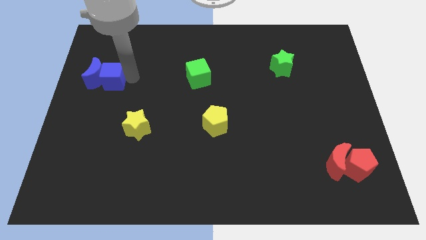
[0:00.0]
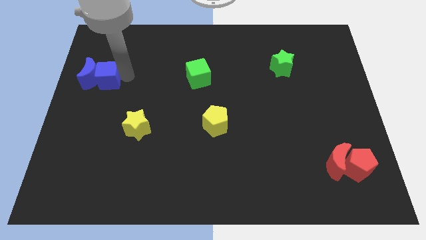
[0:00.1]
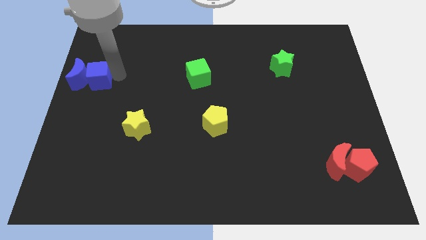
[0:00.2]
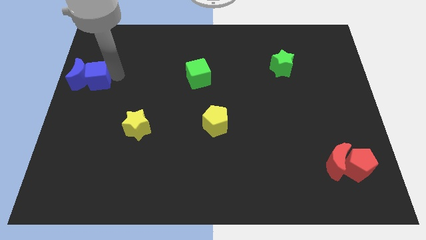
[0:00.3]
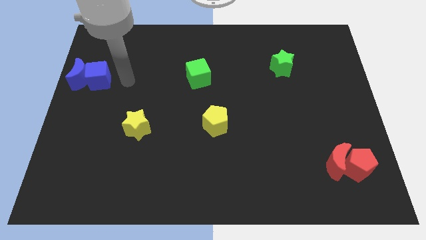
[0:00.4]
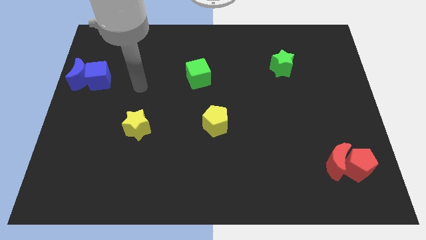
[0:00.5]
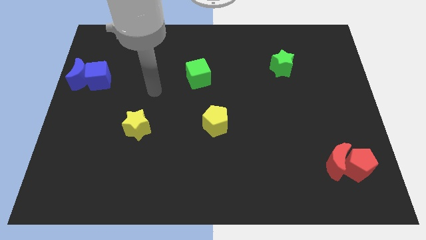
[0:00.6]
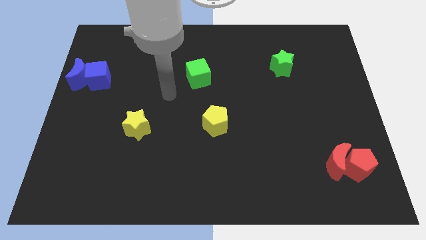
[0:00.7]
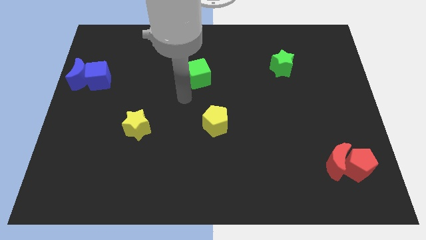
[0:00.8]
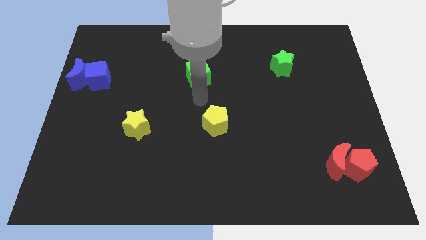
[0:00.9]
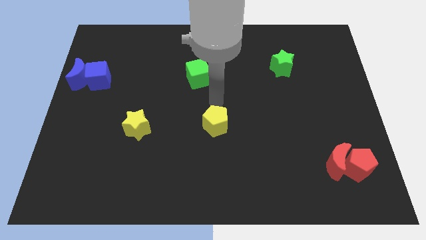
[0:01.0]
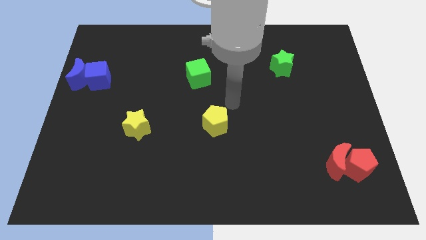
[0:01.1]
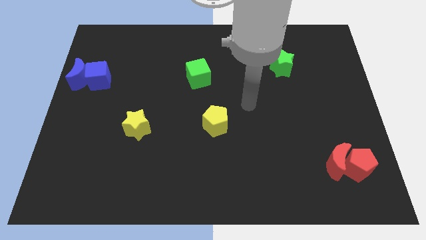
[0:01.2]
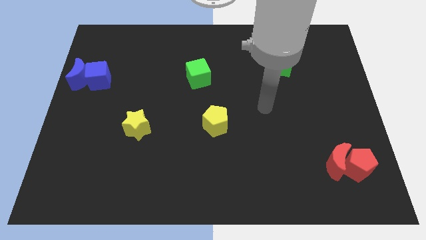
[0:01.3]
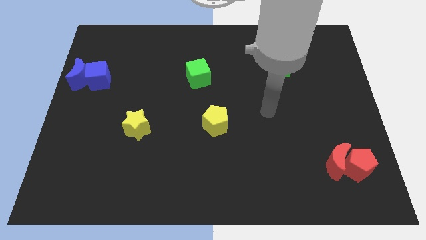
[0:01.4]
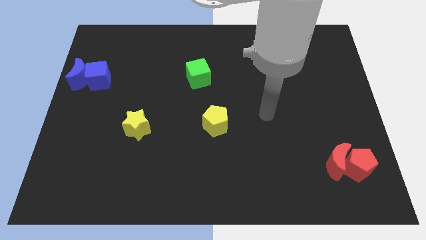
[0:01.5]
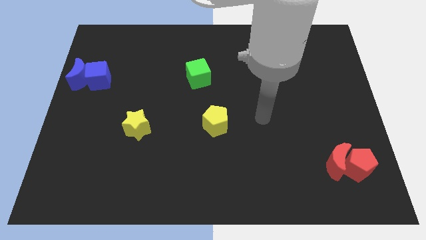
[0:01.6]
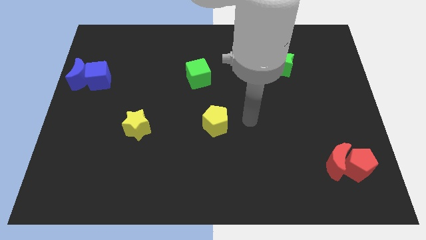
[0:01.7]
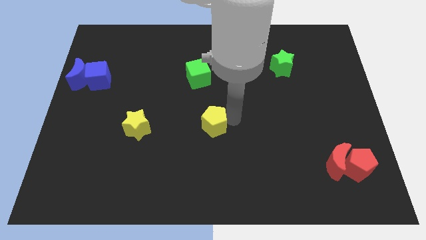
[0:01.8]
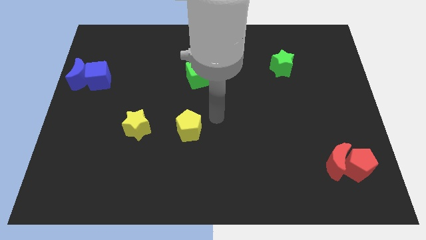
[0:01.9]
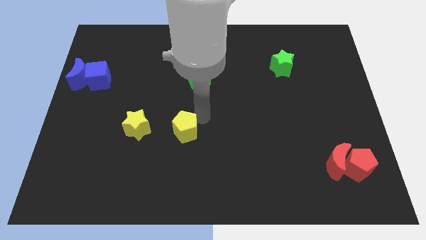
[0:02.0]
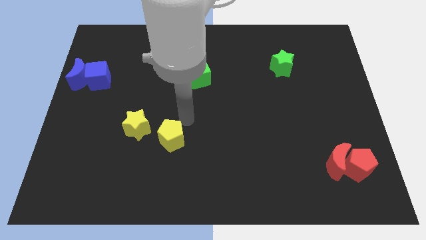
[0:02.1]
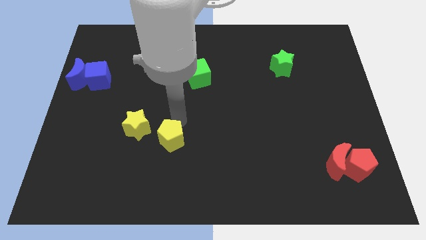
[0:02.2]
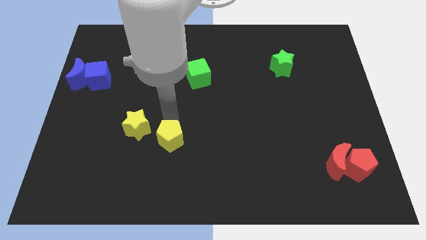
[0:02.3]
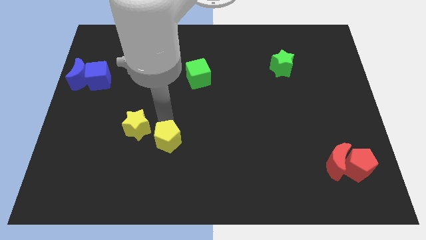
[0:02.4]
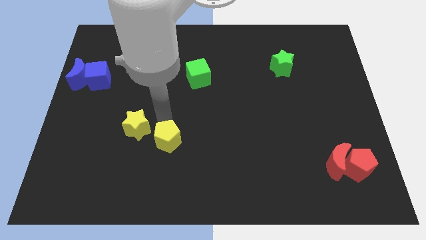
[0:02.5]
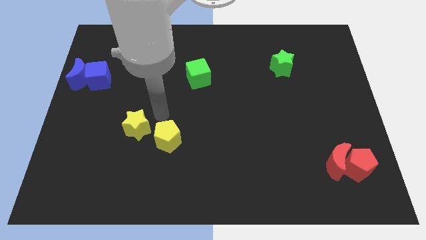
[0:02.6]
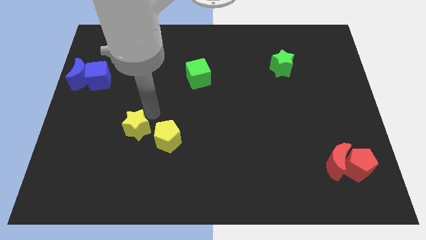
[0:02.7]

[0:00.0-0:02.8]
push the yellow pentagon to the bottom right of the yellow star

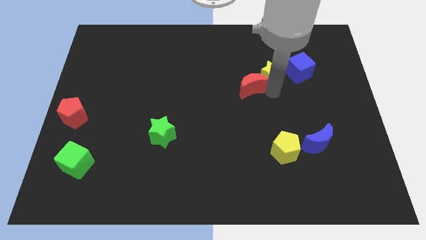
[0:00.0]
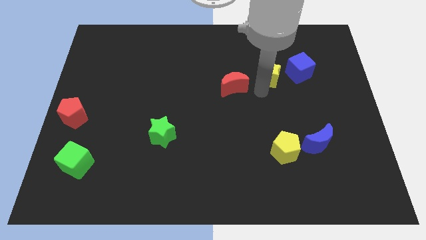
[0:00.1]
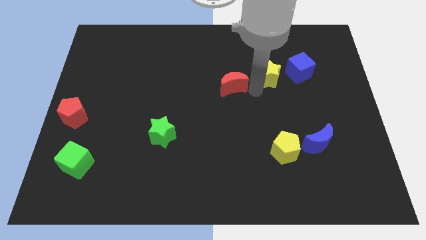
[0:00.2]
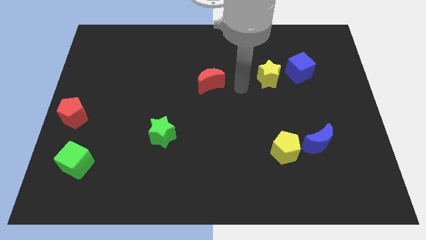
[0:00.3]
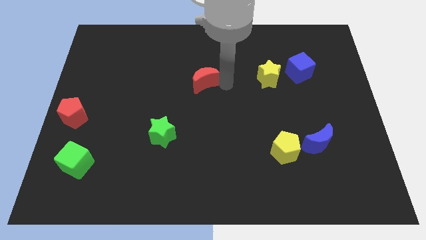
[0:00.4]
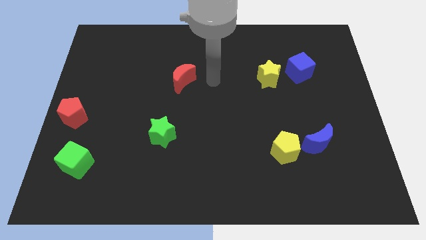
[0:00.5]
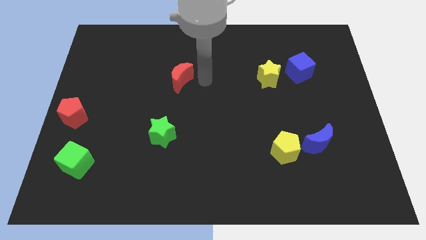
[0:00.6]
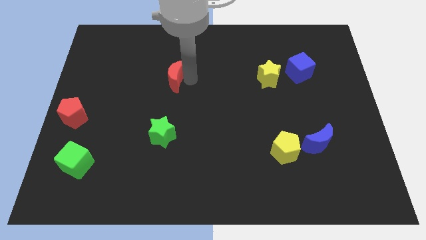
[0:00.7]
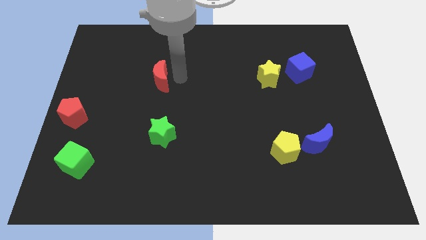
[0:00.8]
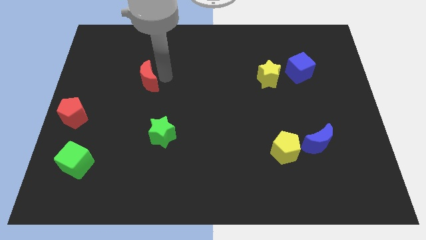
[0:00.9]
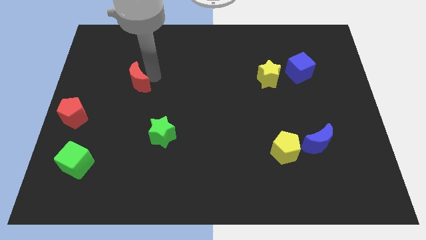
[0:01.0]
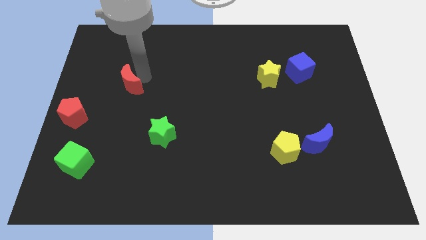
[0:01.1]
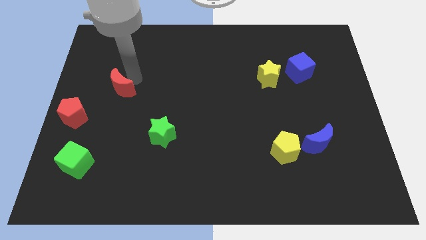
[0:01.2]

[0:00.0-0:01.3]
move the red crescent away from the yellow star

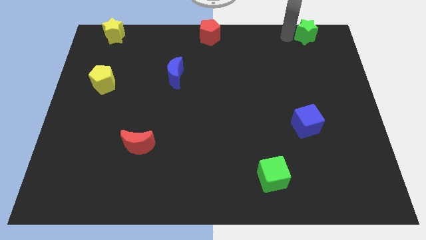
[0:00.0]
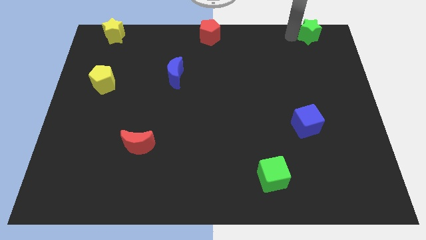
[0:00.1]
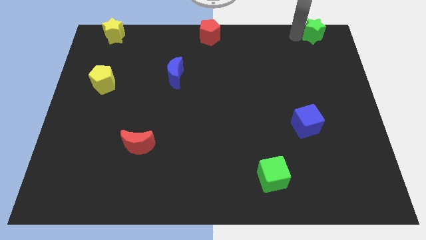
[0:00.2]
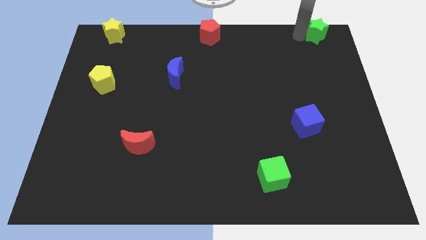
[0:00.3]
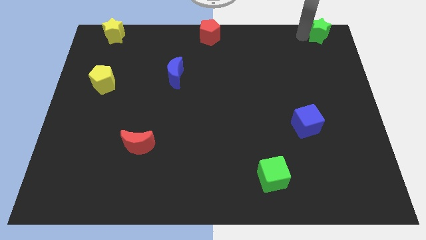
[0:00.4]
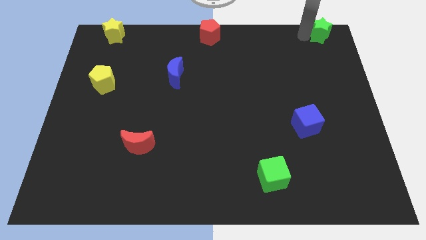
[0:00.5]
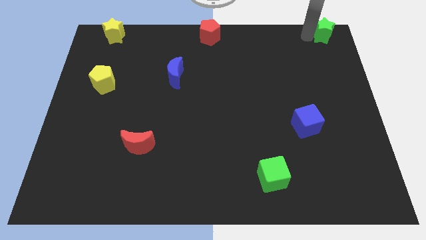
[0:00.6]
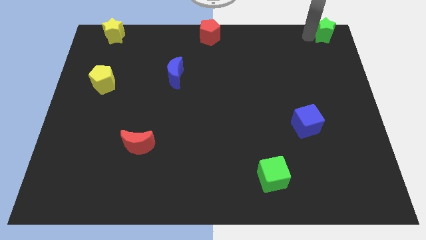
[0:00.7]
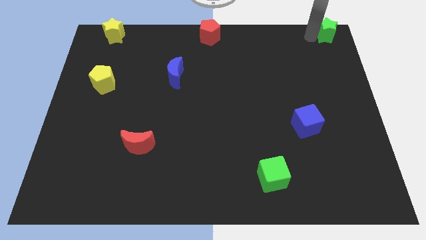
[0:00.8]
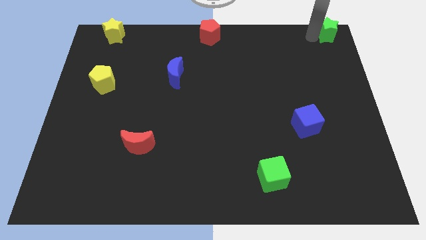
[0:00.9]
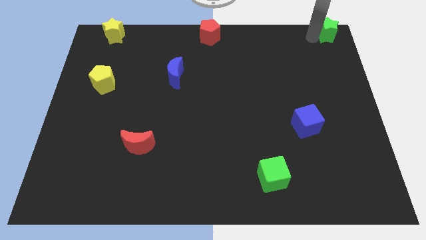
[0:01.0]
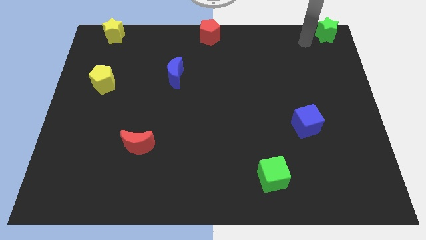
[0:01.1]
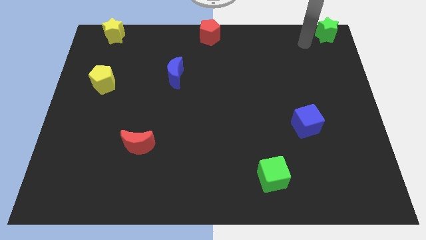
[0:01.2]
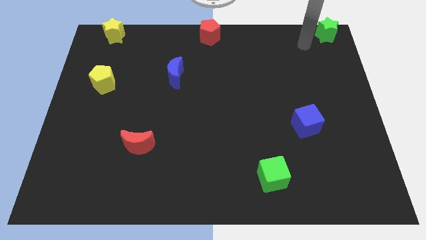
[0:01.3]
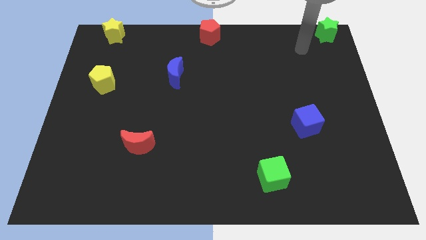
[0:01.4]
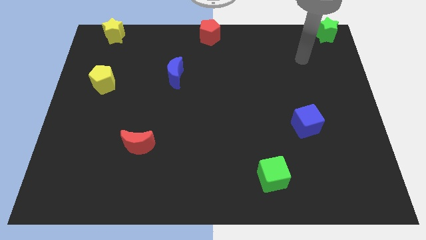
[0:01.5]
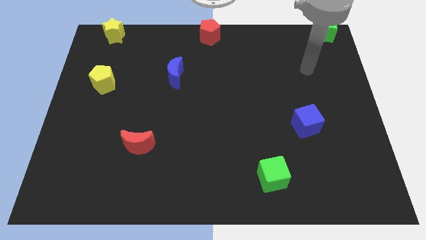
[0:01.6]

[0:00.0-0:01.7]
drag the green star to the top right

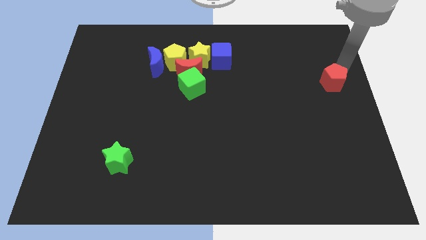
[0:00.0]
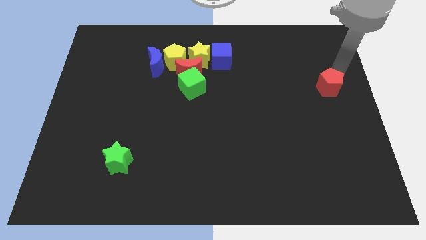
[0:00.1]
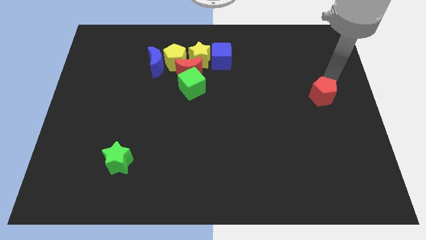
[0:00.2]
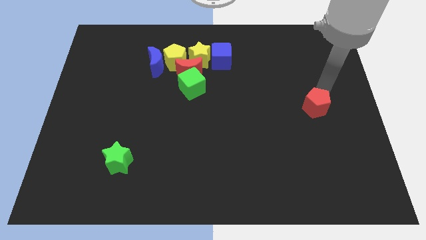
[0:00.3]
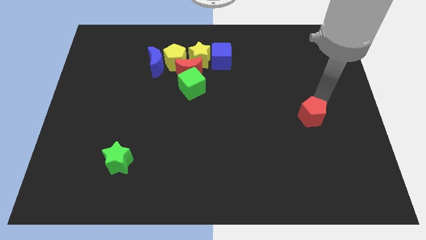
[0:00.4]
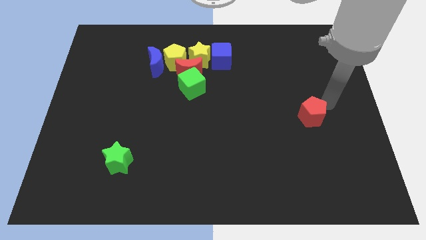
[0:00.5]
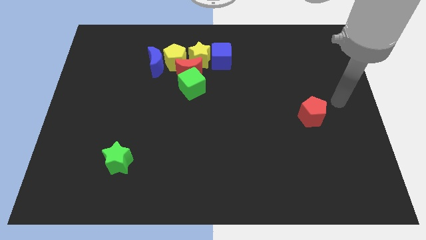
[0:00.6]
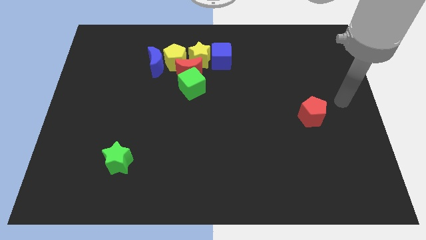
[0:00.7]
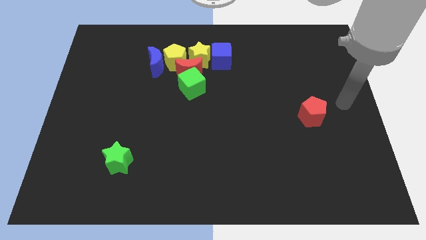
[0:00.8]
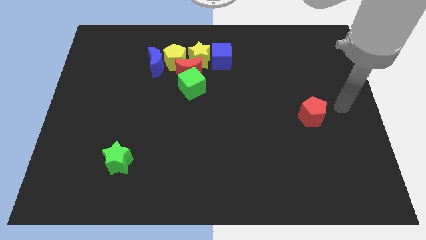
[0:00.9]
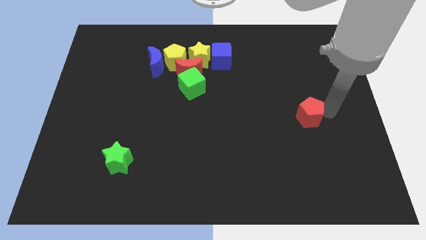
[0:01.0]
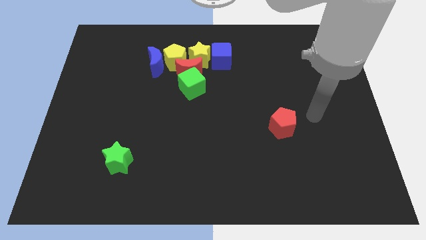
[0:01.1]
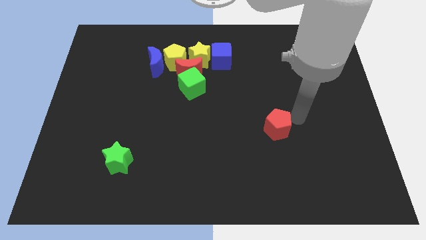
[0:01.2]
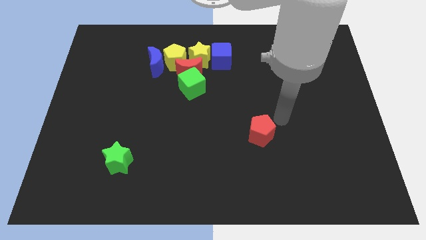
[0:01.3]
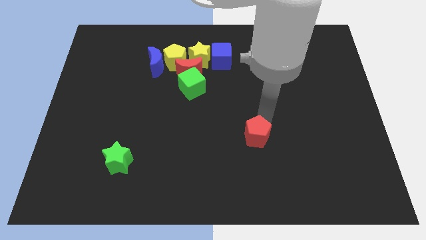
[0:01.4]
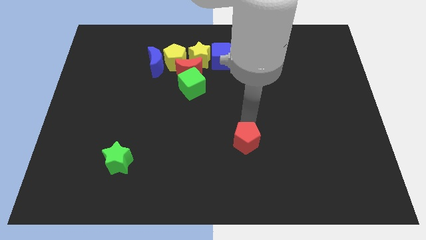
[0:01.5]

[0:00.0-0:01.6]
drag the red pentagon towards bottom side

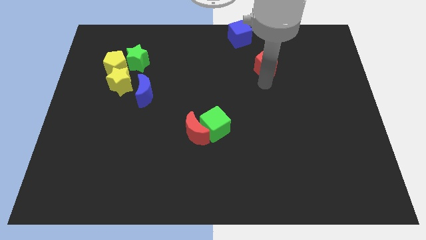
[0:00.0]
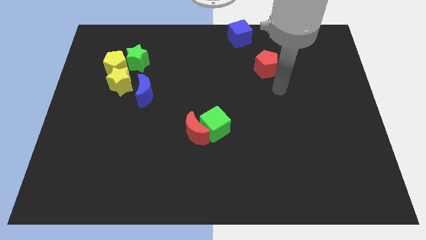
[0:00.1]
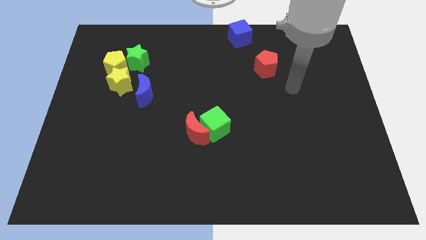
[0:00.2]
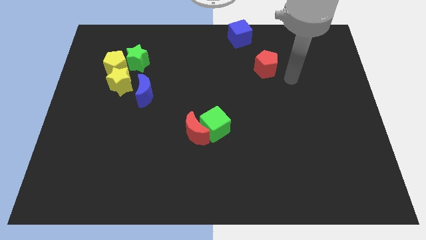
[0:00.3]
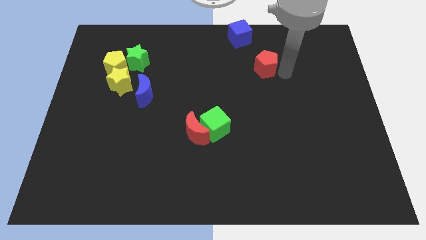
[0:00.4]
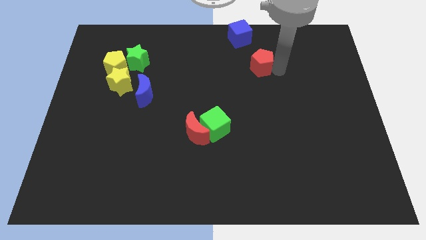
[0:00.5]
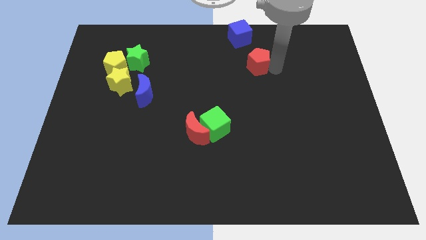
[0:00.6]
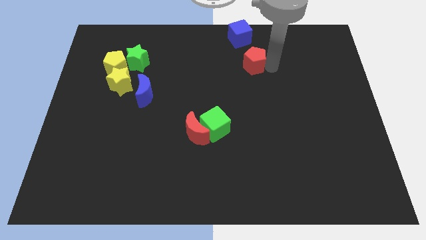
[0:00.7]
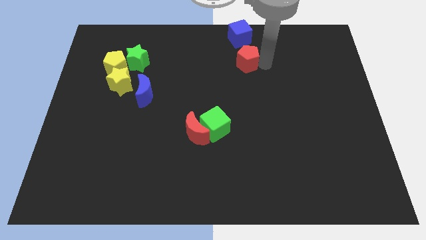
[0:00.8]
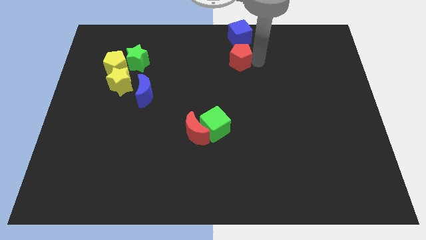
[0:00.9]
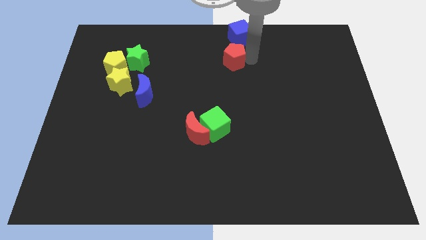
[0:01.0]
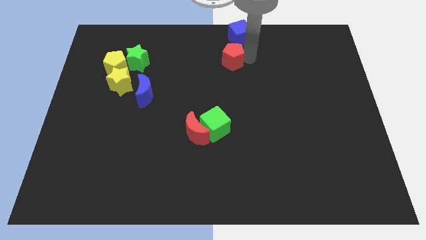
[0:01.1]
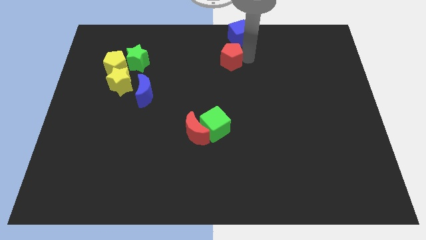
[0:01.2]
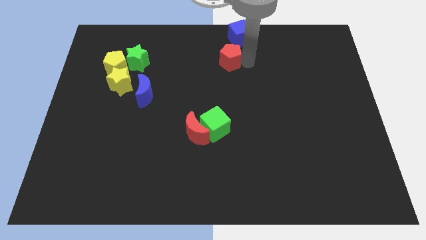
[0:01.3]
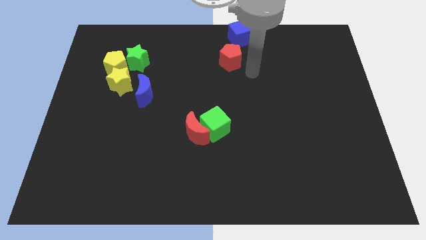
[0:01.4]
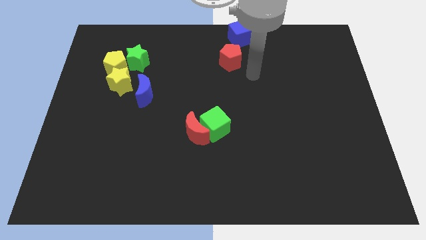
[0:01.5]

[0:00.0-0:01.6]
move the red pentagon below the blue cube
